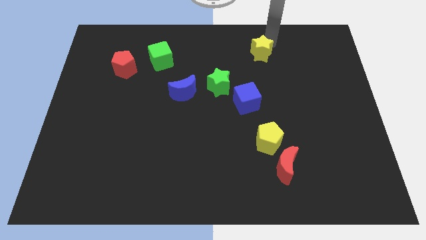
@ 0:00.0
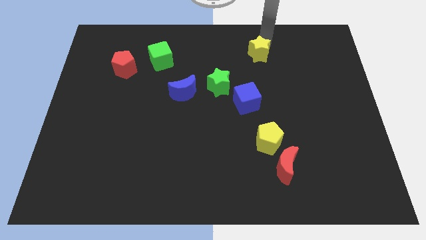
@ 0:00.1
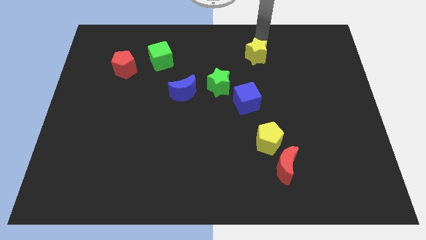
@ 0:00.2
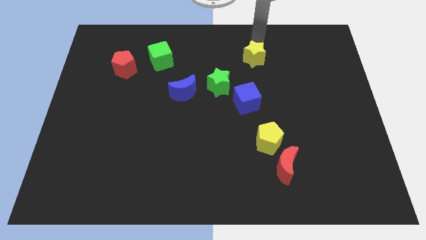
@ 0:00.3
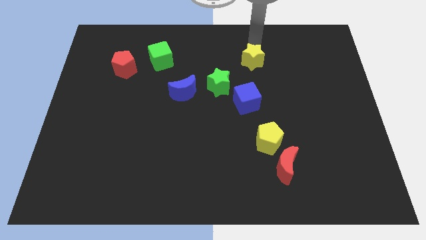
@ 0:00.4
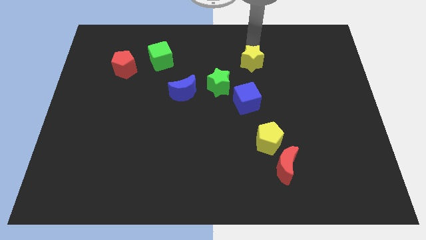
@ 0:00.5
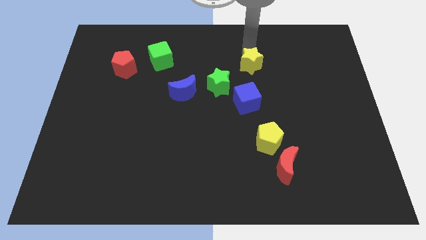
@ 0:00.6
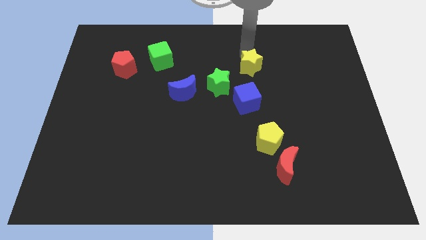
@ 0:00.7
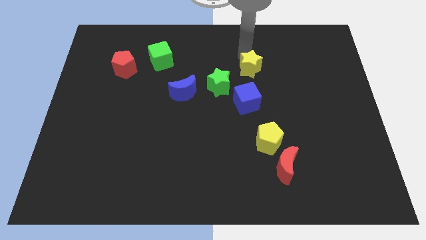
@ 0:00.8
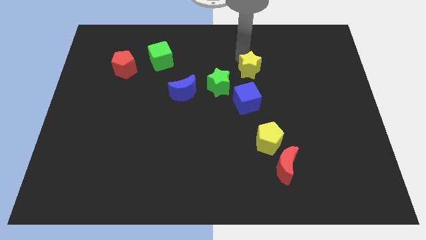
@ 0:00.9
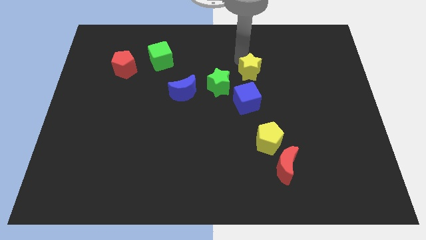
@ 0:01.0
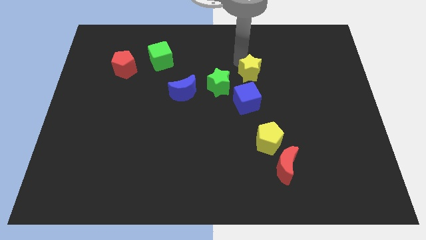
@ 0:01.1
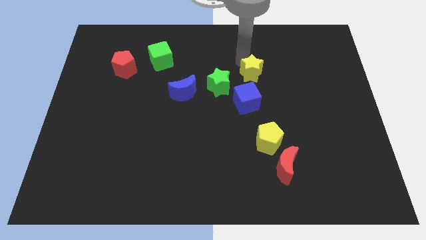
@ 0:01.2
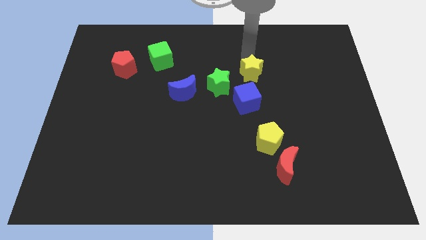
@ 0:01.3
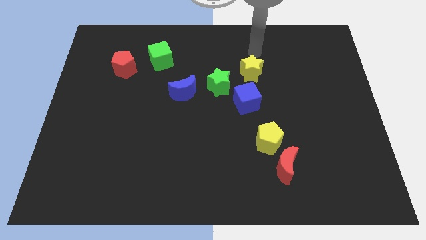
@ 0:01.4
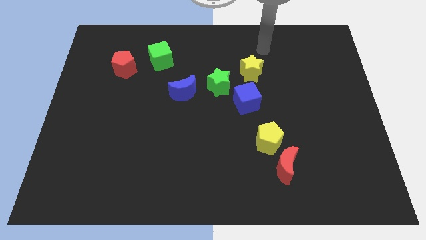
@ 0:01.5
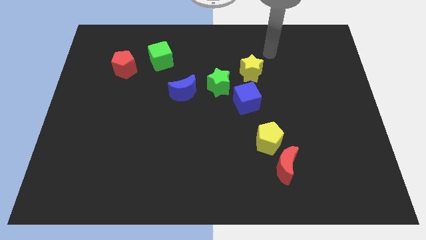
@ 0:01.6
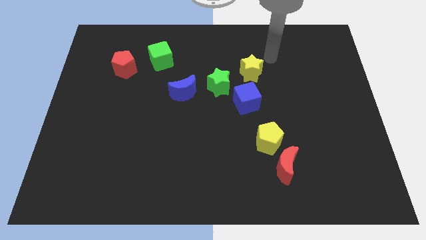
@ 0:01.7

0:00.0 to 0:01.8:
move the yellow star near the blue cube

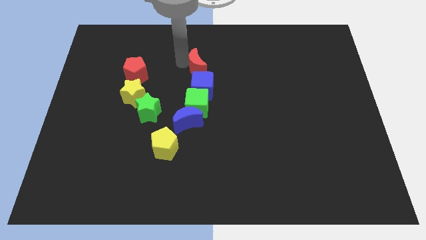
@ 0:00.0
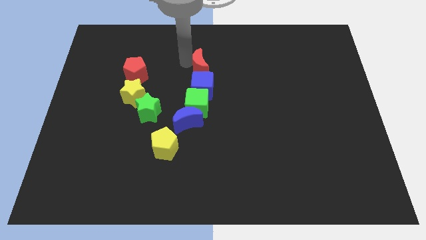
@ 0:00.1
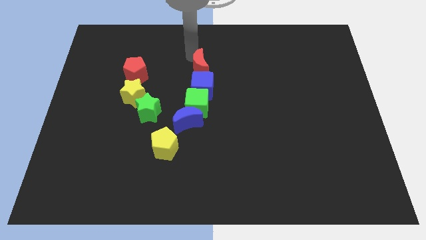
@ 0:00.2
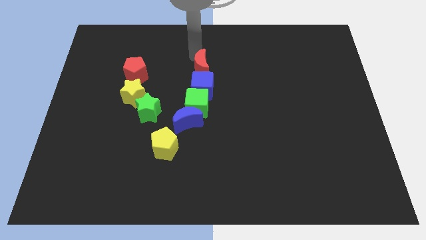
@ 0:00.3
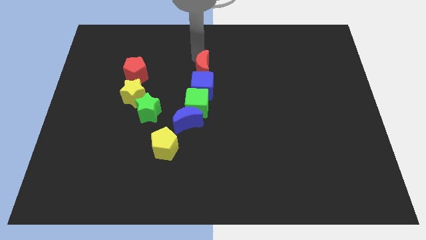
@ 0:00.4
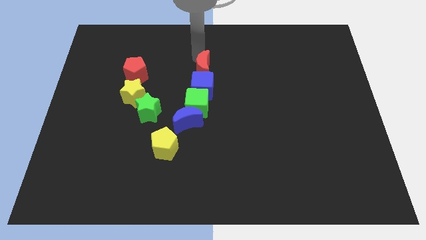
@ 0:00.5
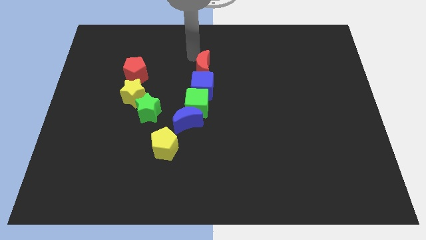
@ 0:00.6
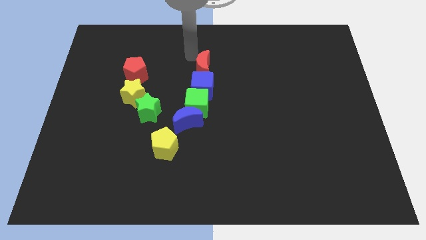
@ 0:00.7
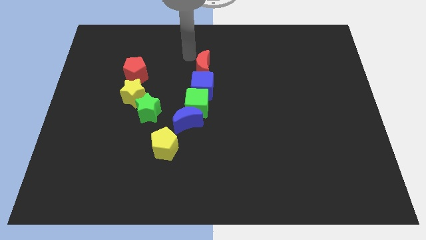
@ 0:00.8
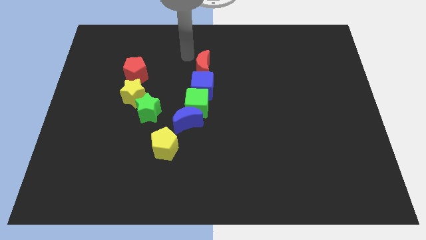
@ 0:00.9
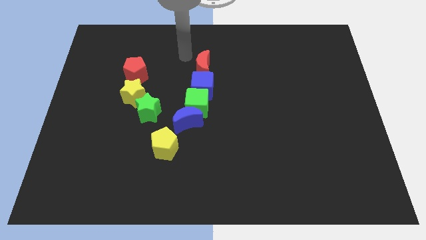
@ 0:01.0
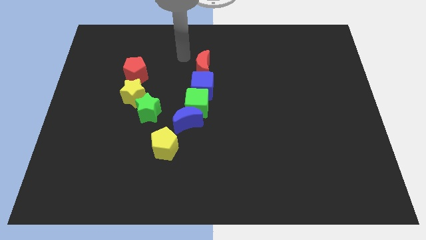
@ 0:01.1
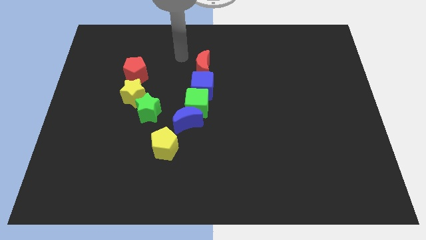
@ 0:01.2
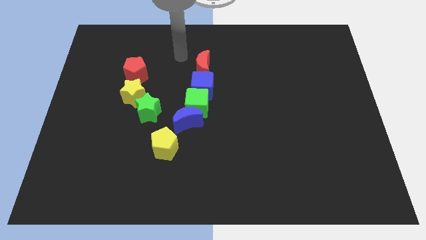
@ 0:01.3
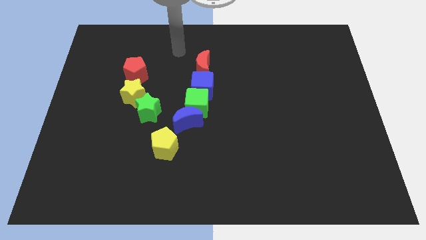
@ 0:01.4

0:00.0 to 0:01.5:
move the arm away from the red pentagon

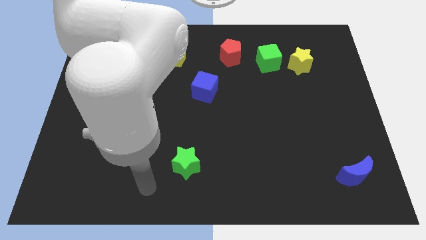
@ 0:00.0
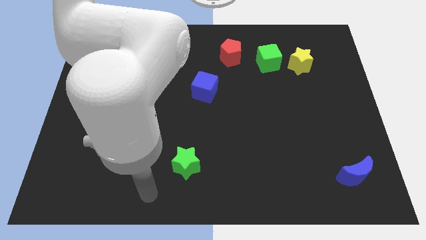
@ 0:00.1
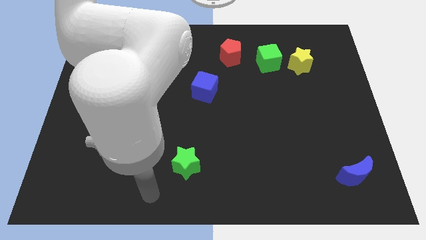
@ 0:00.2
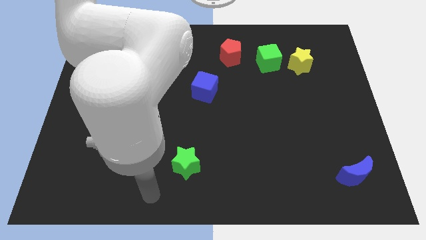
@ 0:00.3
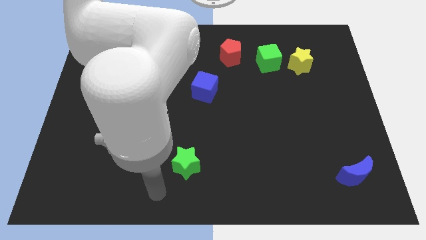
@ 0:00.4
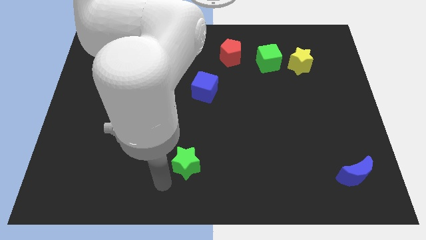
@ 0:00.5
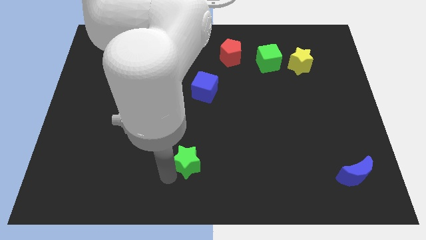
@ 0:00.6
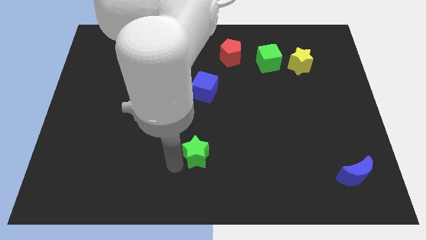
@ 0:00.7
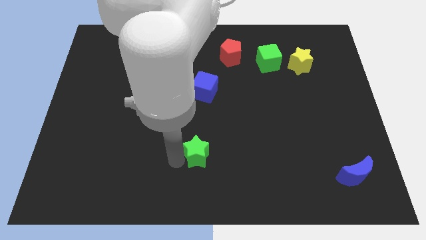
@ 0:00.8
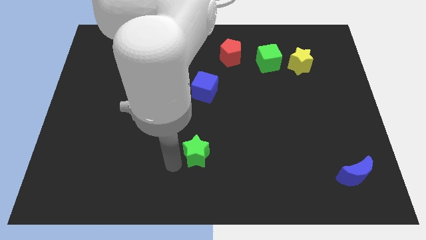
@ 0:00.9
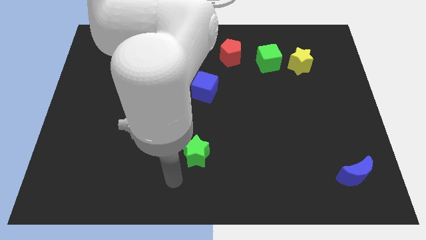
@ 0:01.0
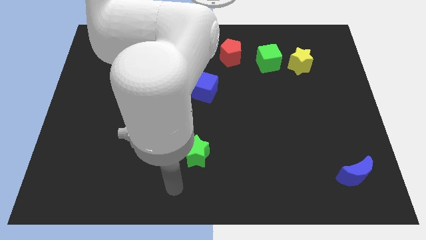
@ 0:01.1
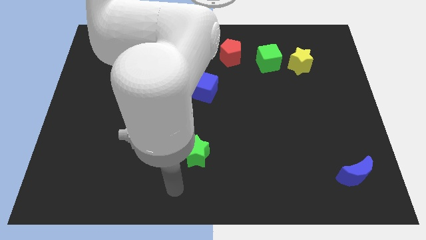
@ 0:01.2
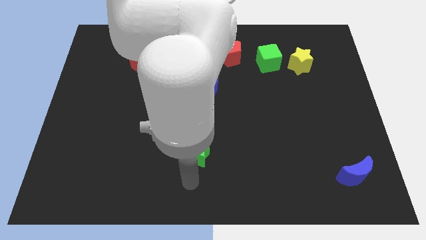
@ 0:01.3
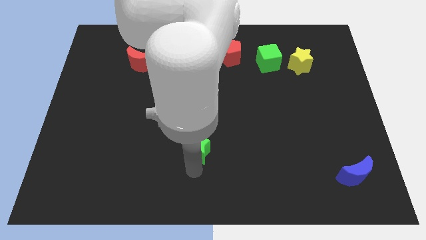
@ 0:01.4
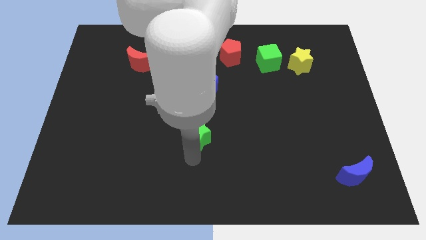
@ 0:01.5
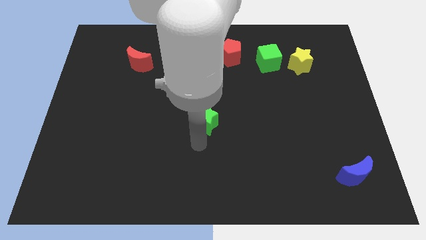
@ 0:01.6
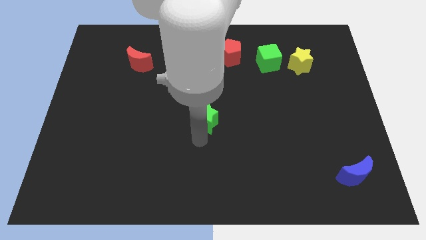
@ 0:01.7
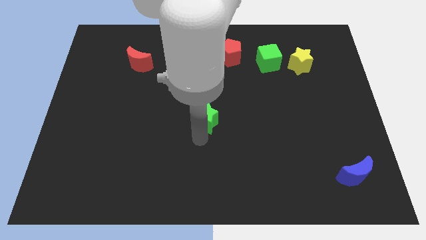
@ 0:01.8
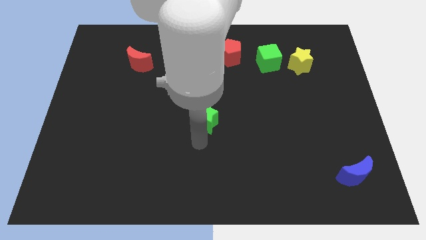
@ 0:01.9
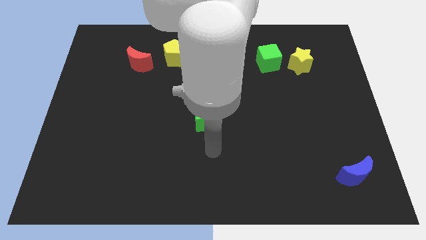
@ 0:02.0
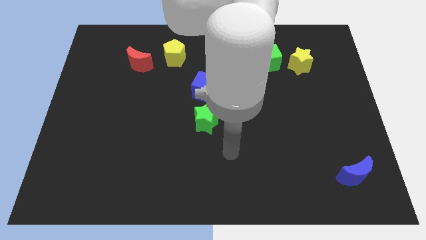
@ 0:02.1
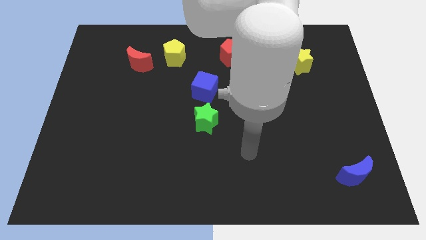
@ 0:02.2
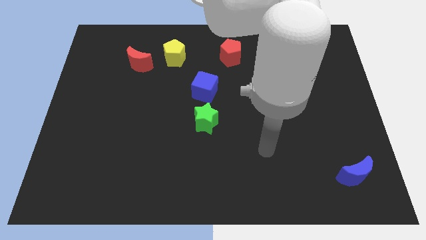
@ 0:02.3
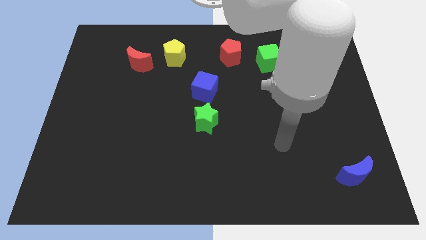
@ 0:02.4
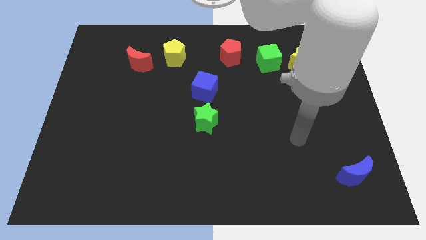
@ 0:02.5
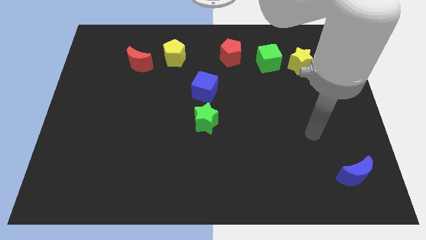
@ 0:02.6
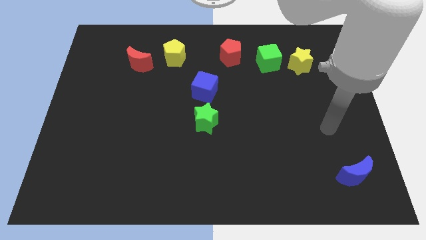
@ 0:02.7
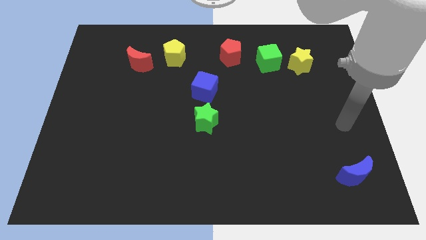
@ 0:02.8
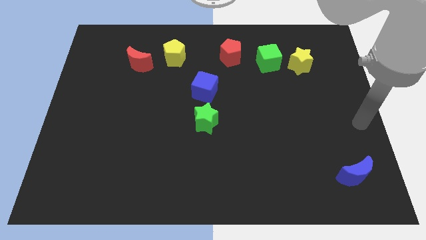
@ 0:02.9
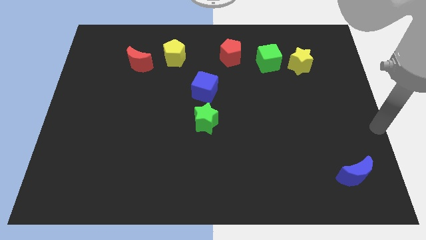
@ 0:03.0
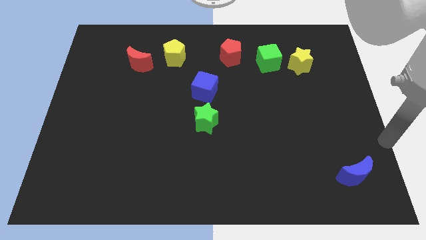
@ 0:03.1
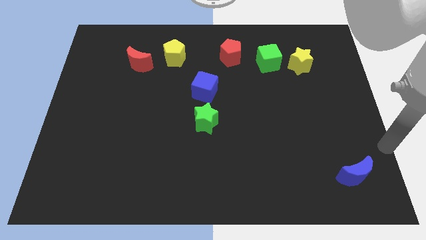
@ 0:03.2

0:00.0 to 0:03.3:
move the green star towards the blue cube

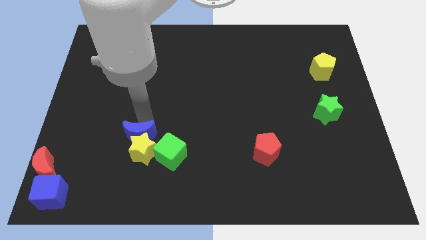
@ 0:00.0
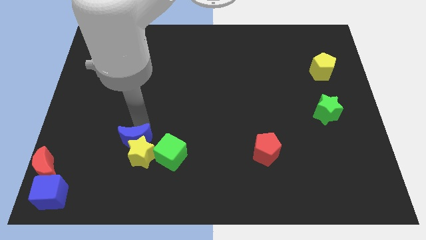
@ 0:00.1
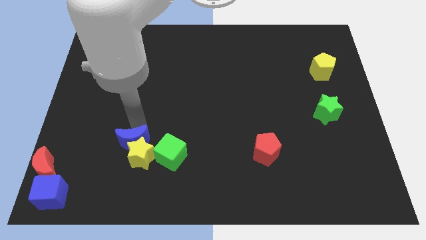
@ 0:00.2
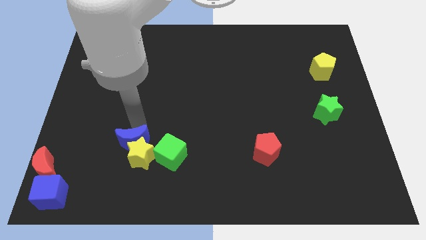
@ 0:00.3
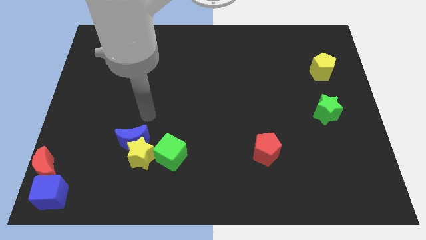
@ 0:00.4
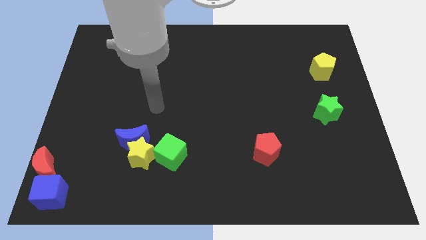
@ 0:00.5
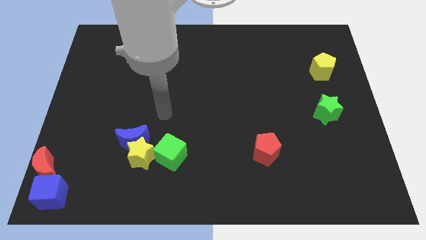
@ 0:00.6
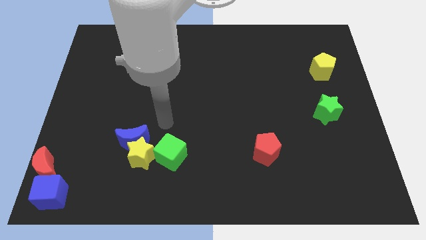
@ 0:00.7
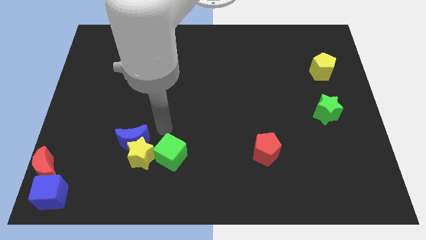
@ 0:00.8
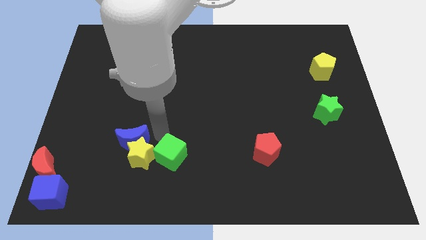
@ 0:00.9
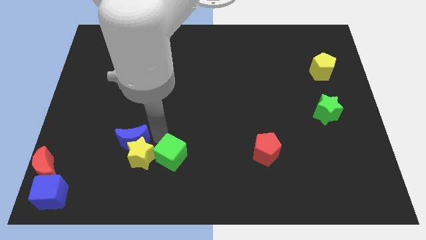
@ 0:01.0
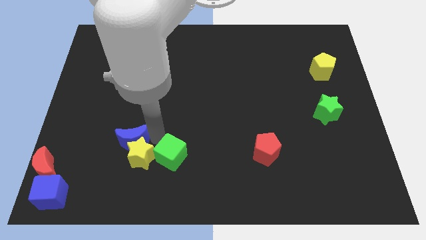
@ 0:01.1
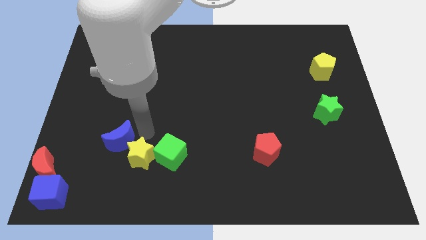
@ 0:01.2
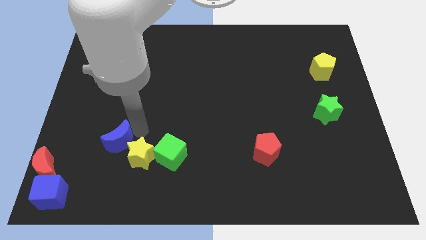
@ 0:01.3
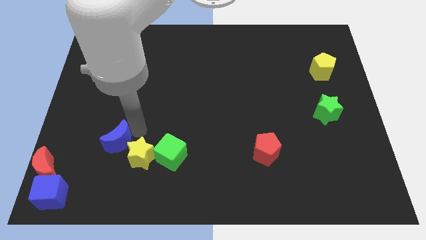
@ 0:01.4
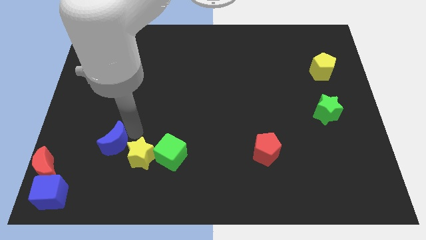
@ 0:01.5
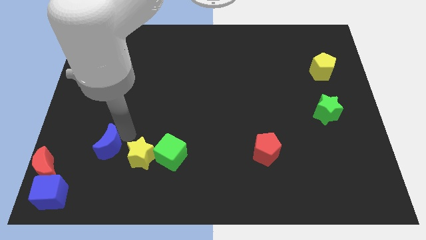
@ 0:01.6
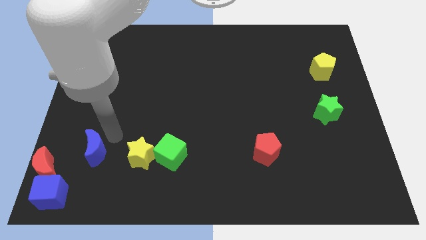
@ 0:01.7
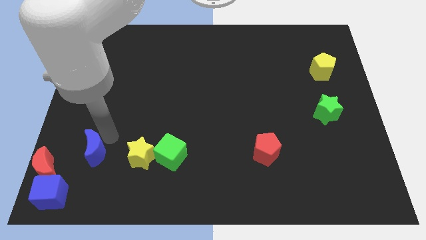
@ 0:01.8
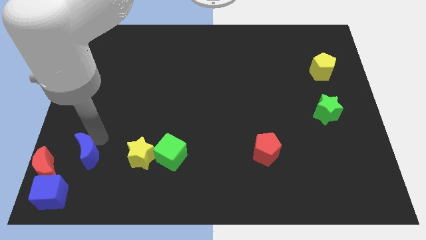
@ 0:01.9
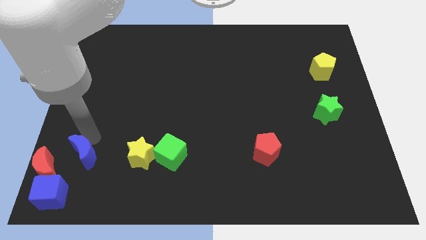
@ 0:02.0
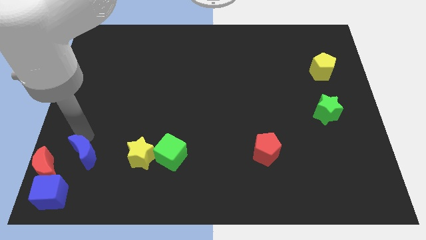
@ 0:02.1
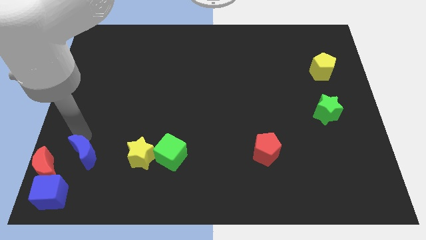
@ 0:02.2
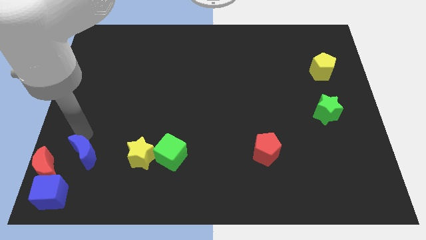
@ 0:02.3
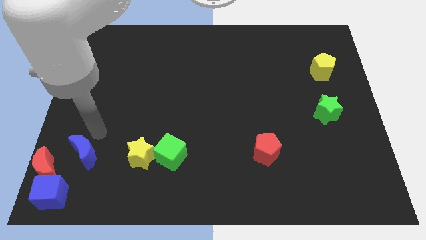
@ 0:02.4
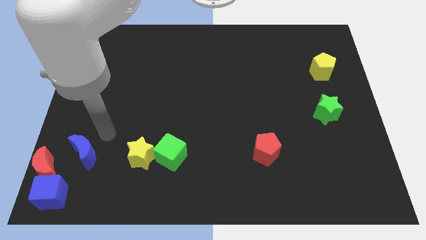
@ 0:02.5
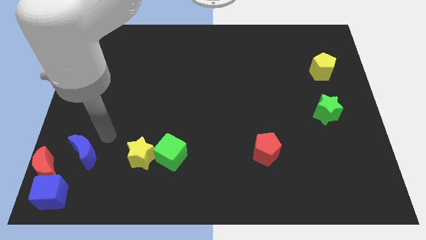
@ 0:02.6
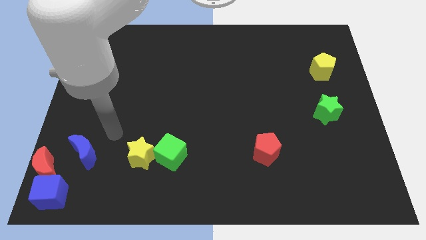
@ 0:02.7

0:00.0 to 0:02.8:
move the blue crescent left of the yellow star
